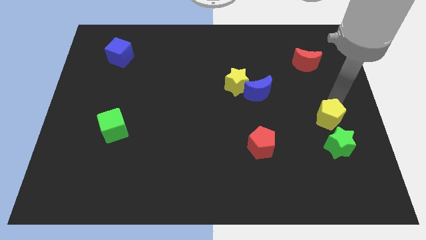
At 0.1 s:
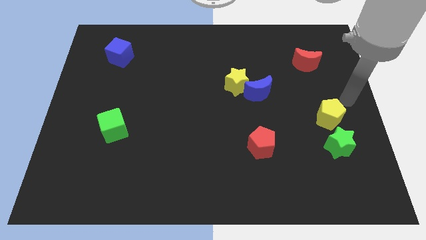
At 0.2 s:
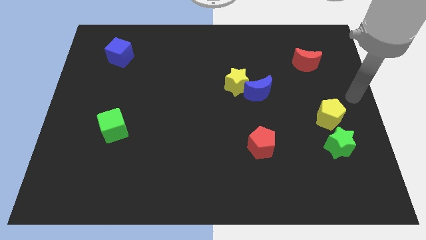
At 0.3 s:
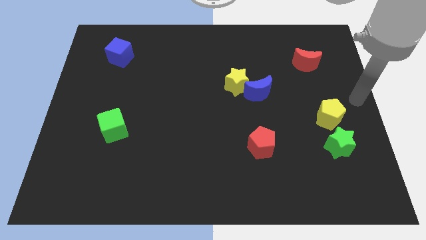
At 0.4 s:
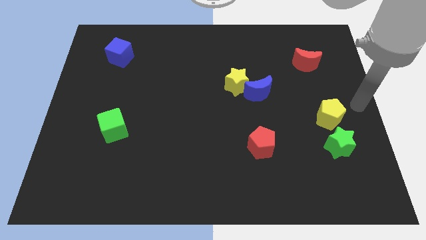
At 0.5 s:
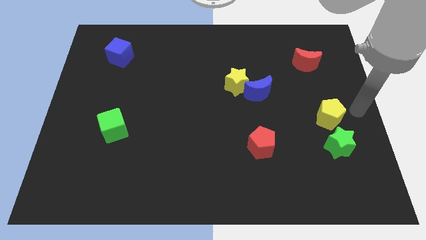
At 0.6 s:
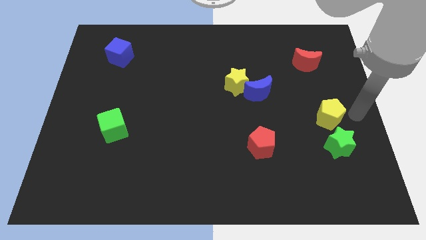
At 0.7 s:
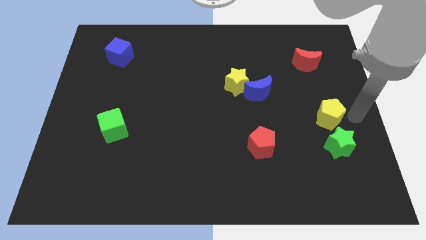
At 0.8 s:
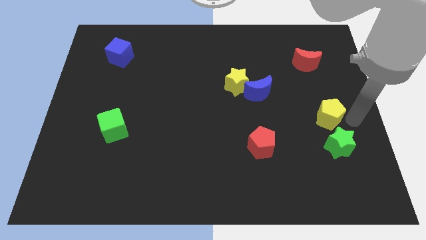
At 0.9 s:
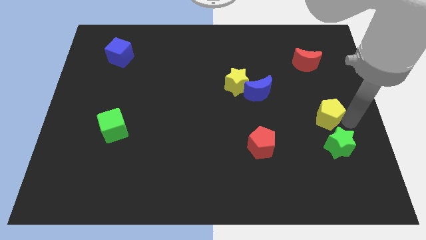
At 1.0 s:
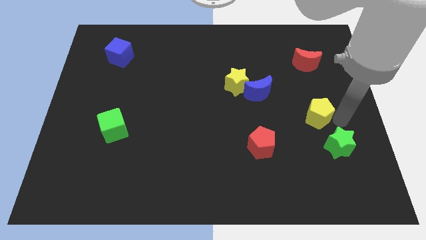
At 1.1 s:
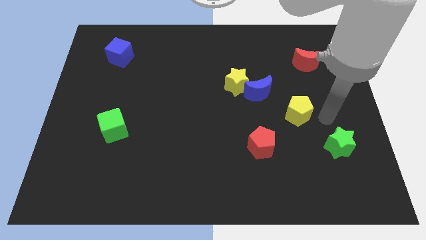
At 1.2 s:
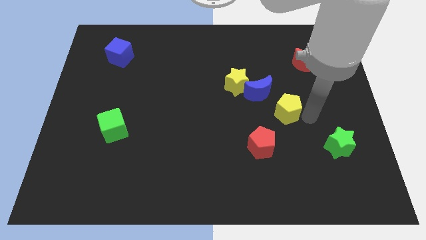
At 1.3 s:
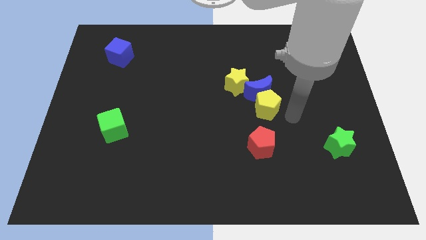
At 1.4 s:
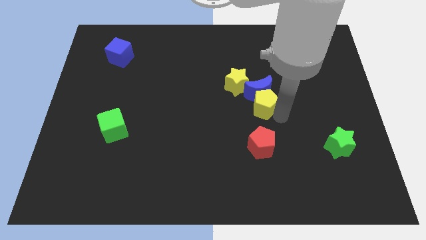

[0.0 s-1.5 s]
slightly move the yellow pentagon to the bottom side of the blue moon

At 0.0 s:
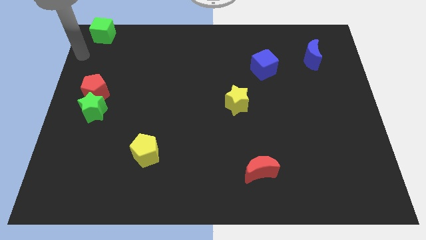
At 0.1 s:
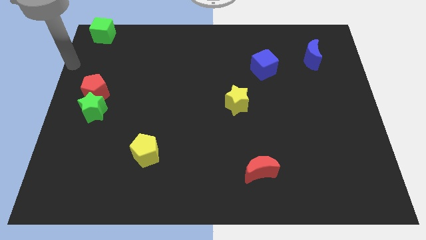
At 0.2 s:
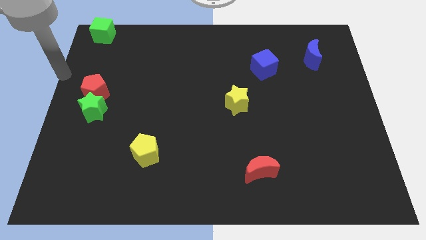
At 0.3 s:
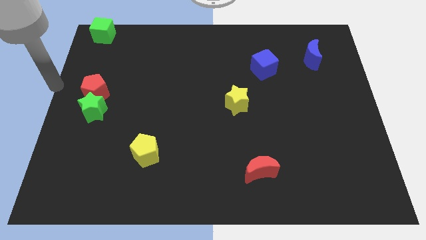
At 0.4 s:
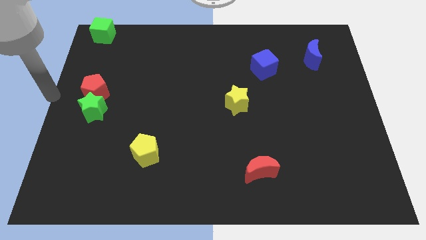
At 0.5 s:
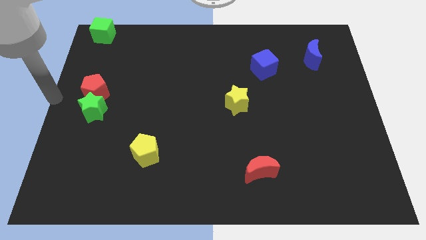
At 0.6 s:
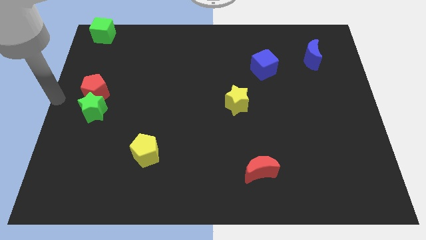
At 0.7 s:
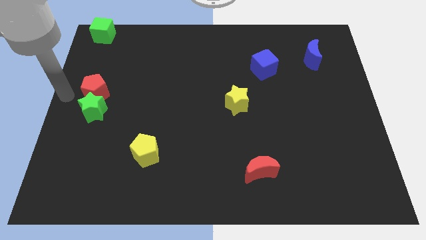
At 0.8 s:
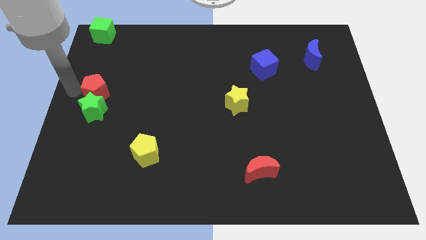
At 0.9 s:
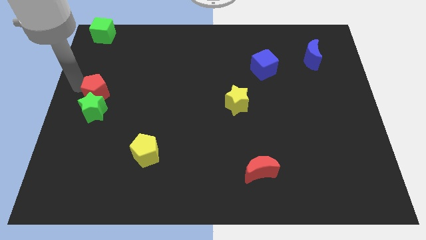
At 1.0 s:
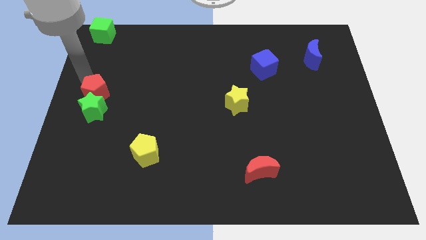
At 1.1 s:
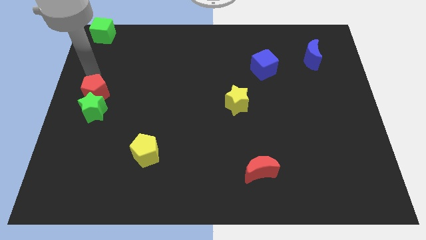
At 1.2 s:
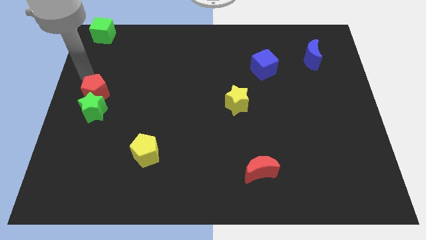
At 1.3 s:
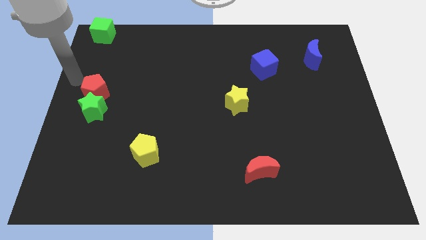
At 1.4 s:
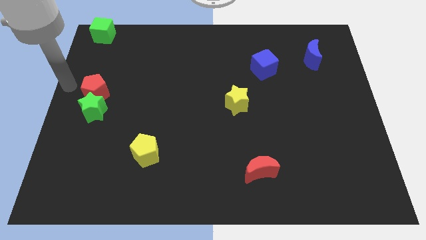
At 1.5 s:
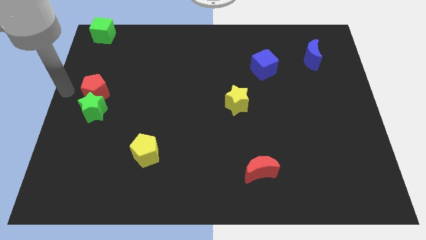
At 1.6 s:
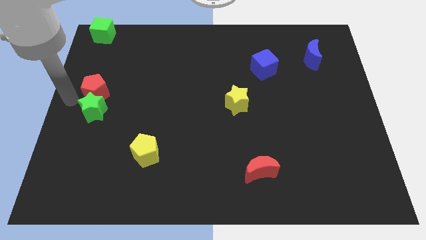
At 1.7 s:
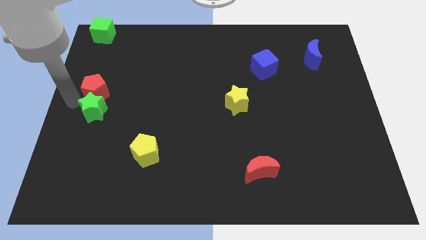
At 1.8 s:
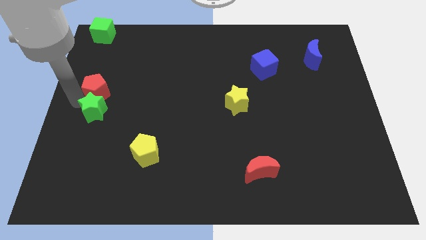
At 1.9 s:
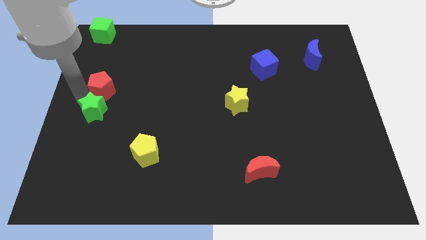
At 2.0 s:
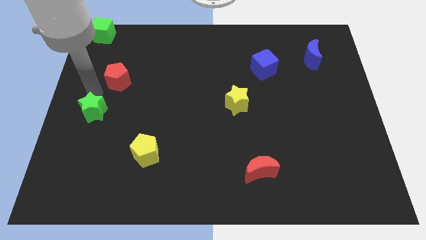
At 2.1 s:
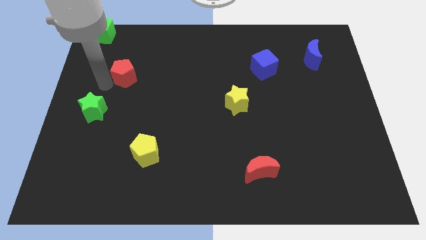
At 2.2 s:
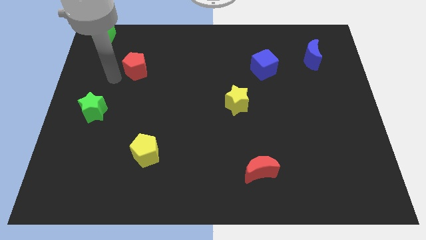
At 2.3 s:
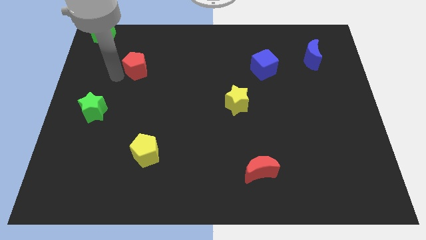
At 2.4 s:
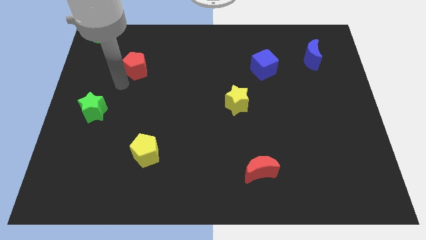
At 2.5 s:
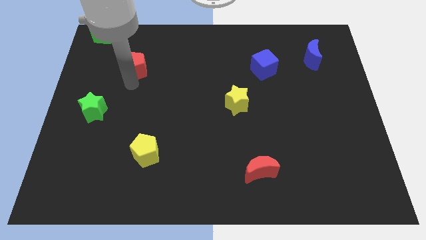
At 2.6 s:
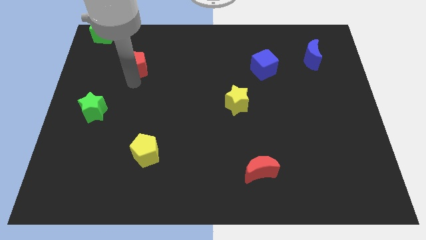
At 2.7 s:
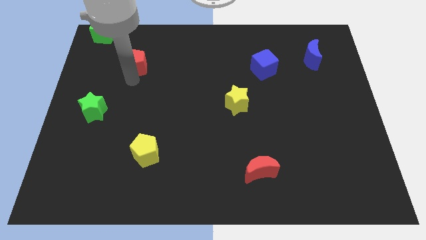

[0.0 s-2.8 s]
separate red pentagon from green star

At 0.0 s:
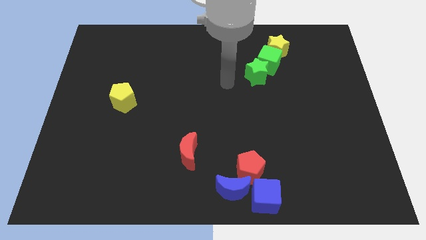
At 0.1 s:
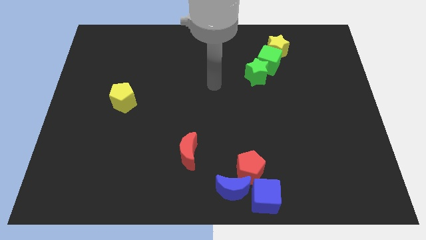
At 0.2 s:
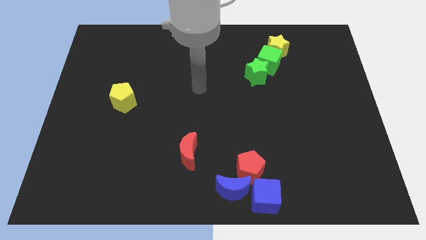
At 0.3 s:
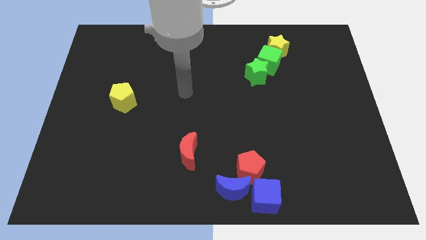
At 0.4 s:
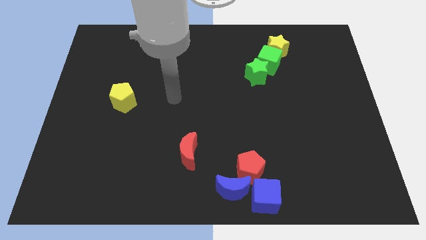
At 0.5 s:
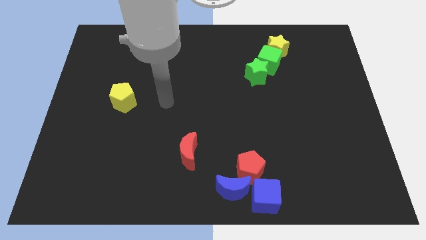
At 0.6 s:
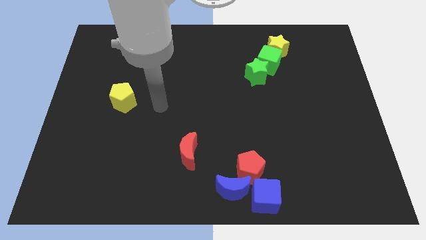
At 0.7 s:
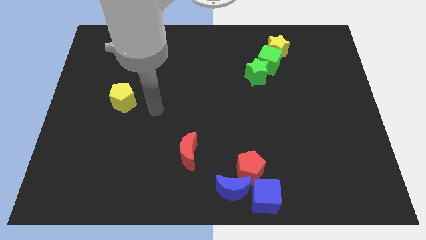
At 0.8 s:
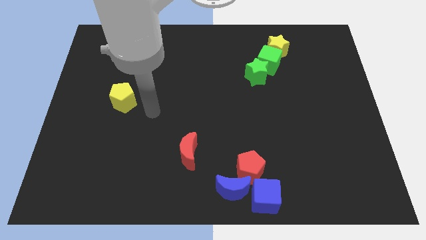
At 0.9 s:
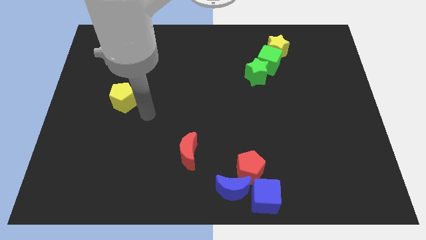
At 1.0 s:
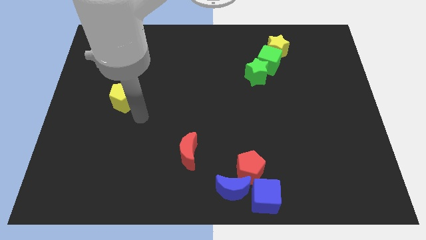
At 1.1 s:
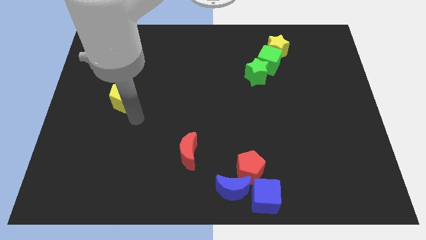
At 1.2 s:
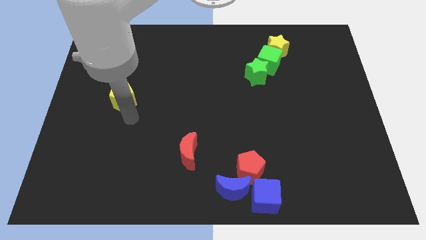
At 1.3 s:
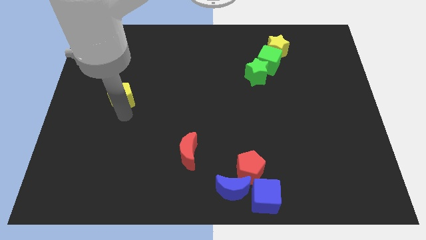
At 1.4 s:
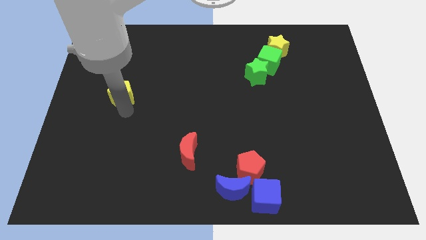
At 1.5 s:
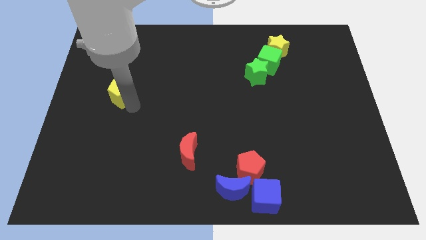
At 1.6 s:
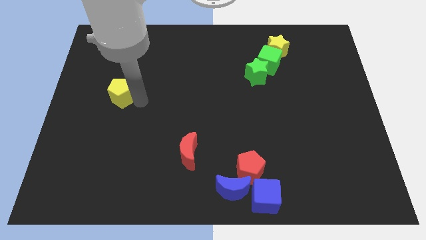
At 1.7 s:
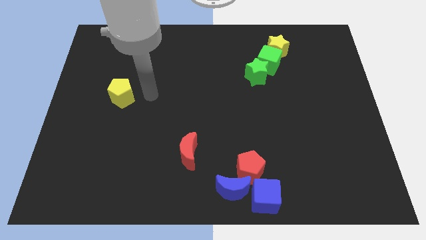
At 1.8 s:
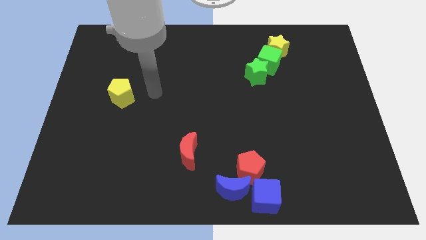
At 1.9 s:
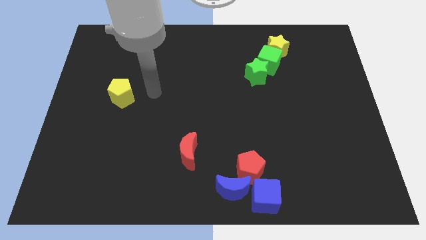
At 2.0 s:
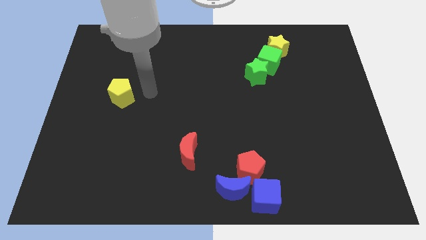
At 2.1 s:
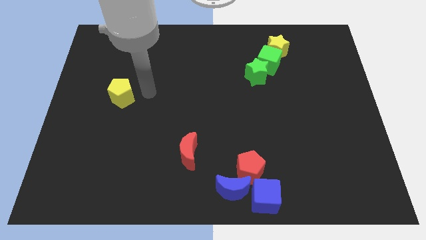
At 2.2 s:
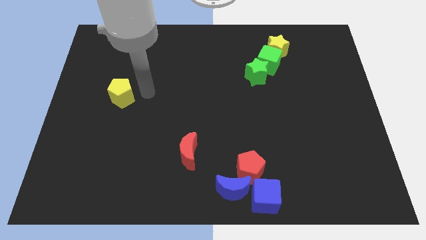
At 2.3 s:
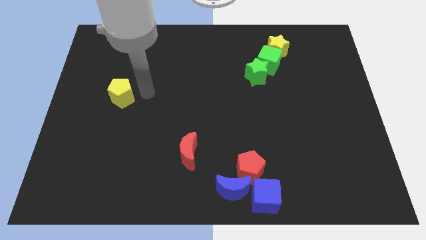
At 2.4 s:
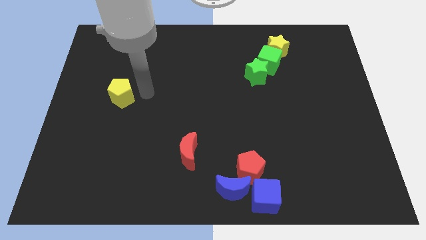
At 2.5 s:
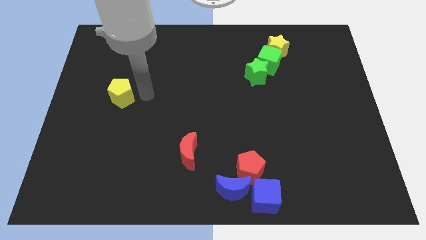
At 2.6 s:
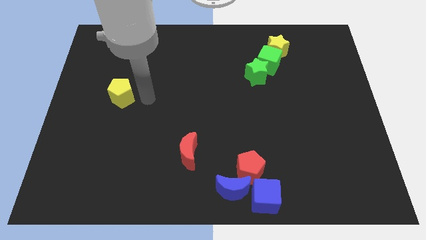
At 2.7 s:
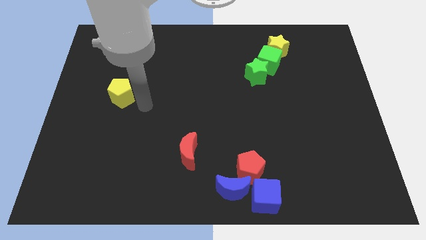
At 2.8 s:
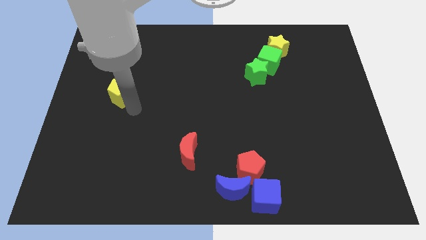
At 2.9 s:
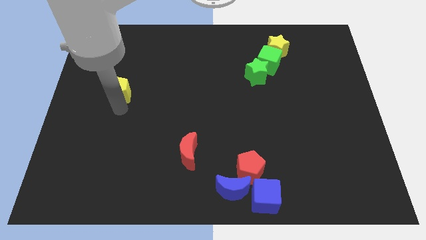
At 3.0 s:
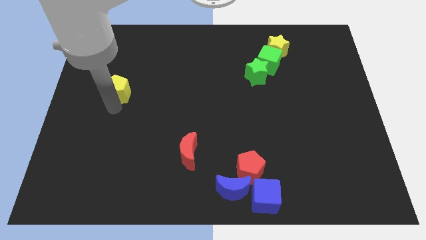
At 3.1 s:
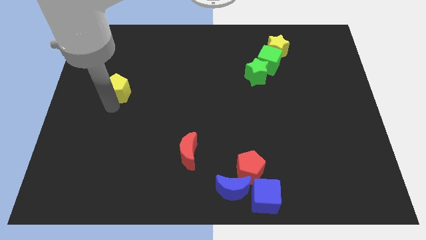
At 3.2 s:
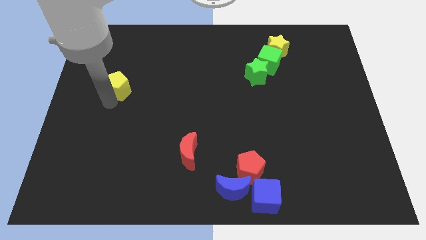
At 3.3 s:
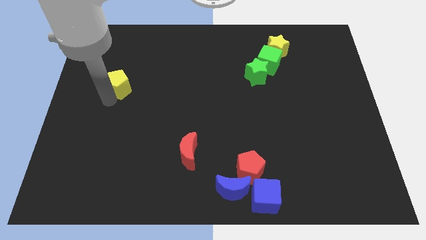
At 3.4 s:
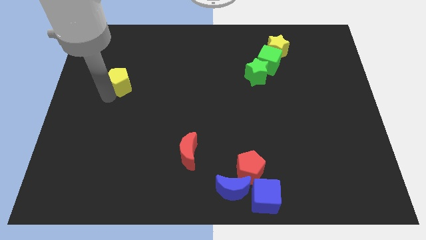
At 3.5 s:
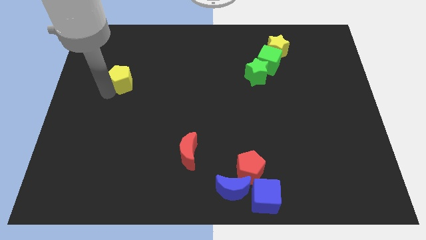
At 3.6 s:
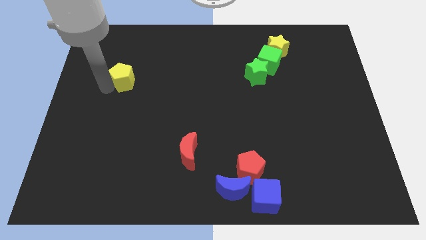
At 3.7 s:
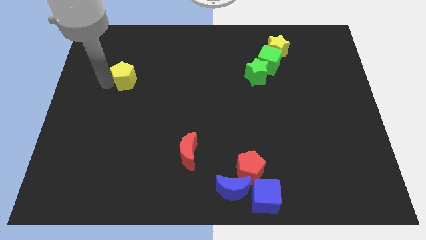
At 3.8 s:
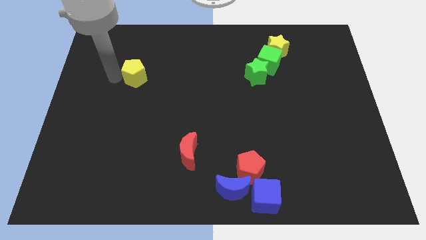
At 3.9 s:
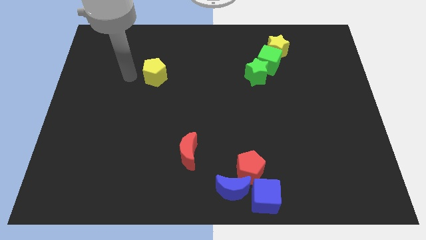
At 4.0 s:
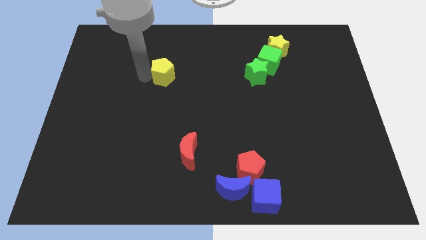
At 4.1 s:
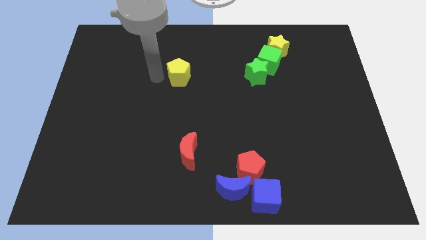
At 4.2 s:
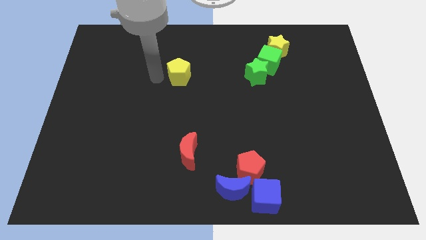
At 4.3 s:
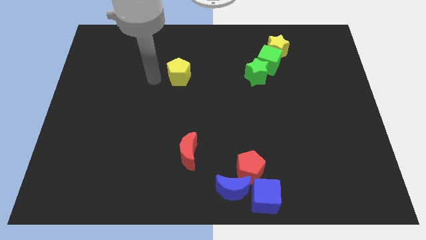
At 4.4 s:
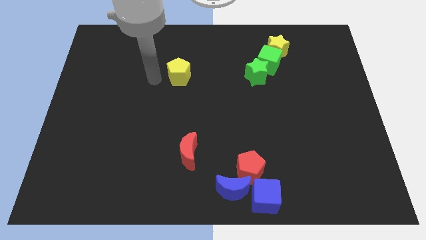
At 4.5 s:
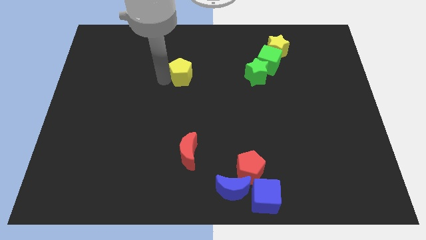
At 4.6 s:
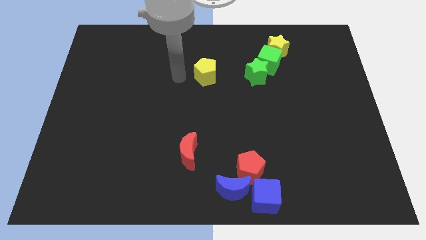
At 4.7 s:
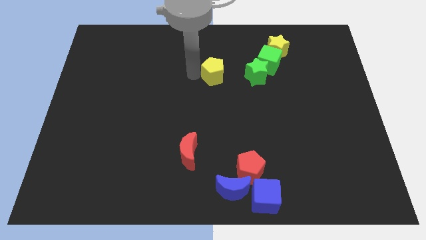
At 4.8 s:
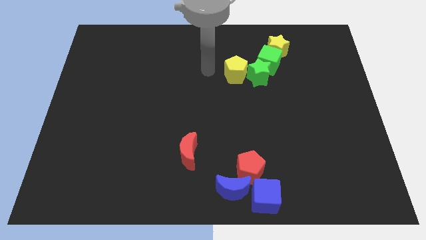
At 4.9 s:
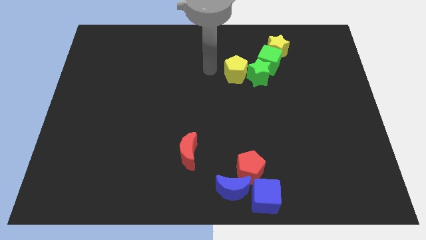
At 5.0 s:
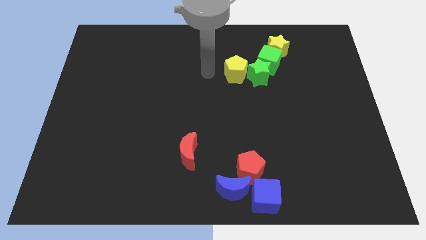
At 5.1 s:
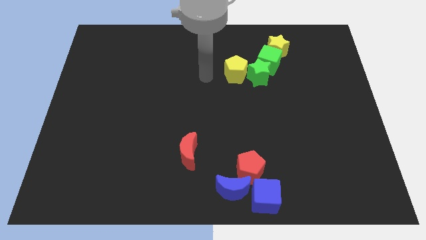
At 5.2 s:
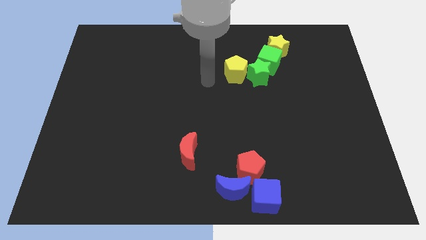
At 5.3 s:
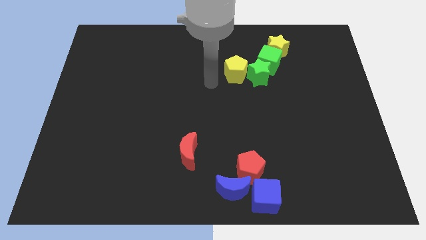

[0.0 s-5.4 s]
place the yellow pentagon left to the green star
